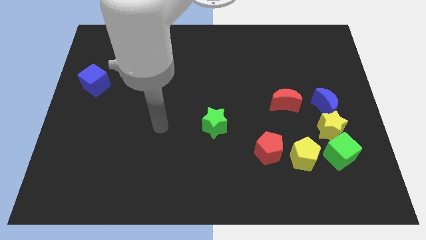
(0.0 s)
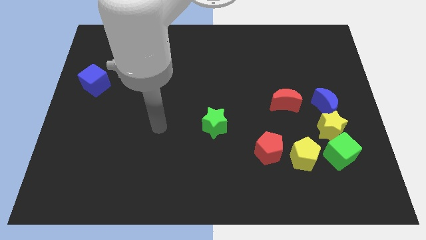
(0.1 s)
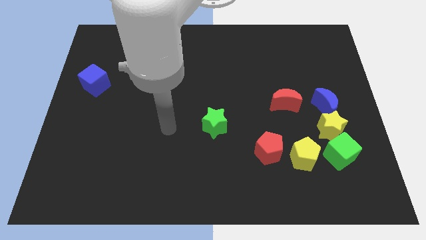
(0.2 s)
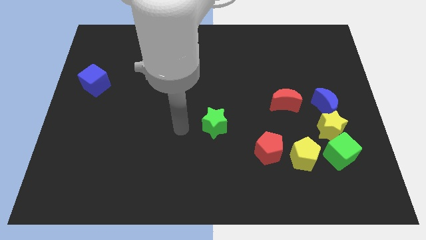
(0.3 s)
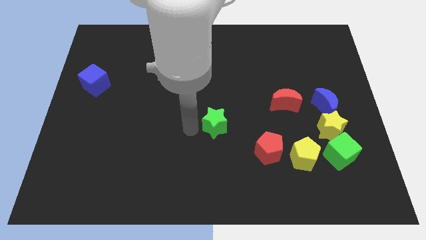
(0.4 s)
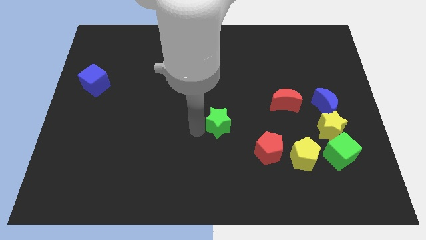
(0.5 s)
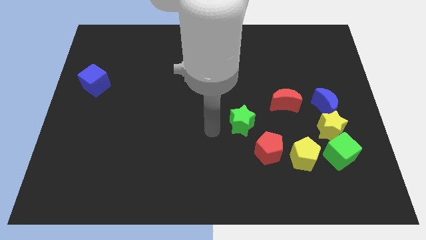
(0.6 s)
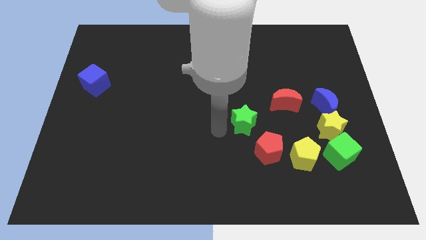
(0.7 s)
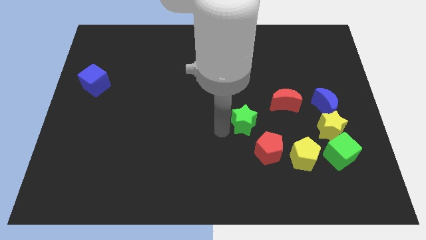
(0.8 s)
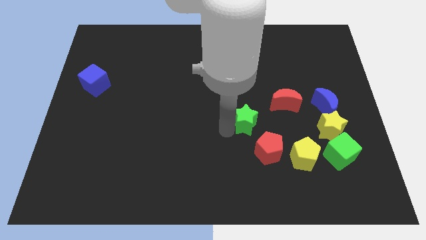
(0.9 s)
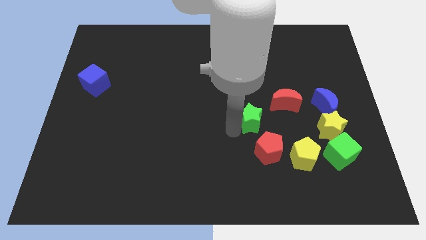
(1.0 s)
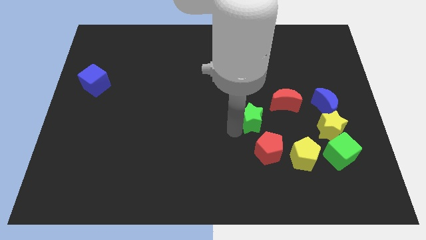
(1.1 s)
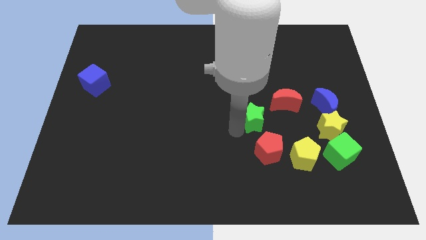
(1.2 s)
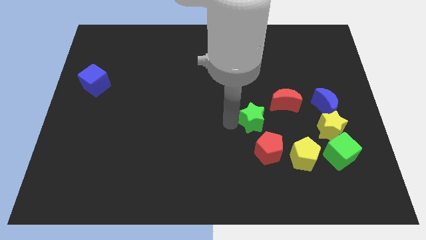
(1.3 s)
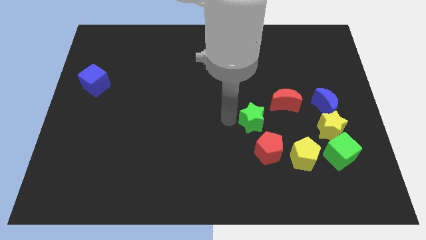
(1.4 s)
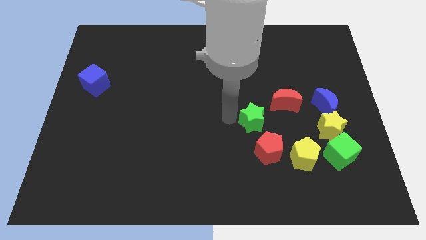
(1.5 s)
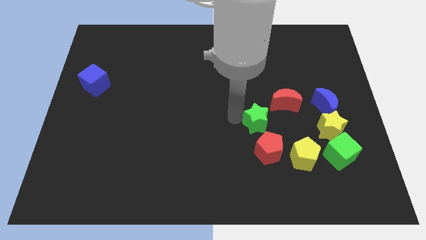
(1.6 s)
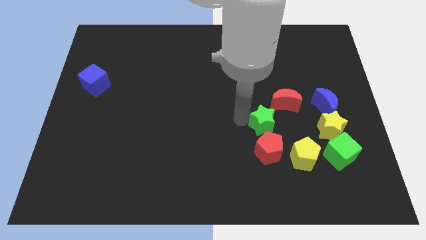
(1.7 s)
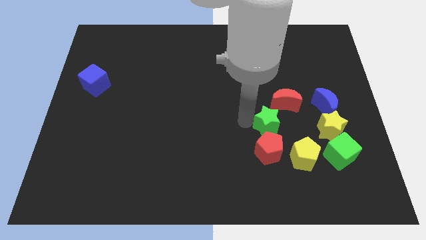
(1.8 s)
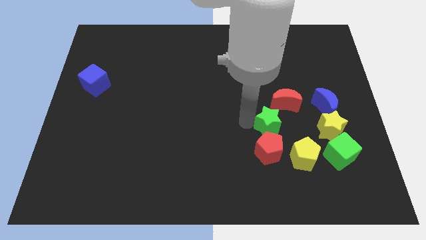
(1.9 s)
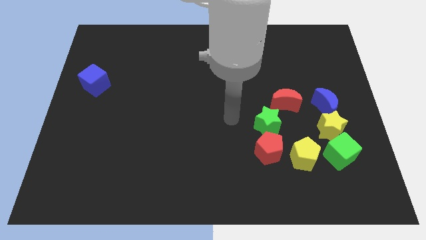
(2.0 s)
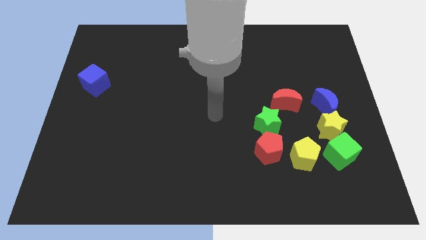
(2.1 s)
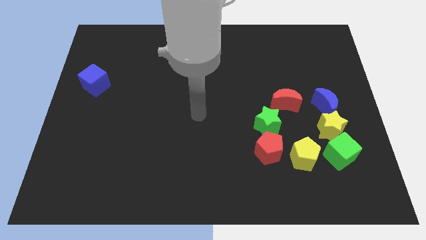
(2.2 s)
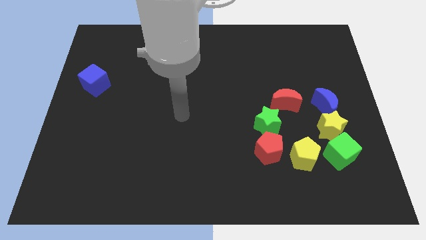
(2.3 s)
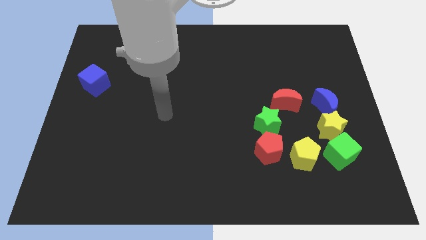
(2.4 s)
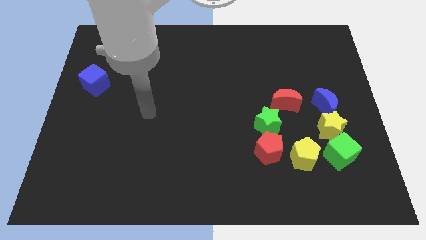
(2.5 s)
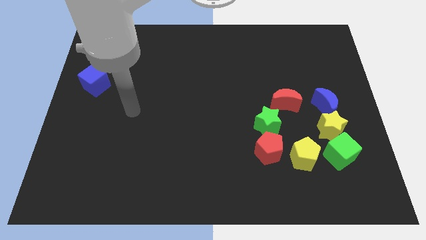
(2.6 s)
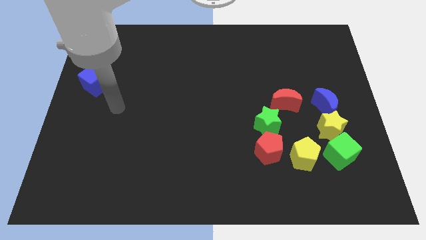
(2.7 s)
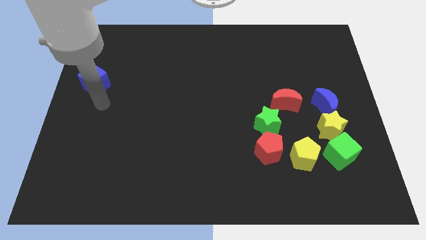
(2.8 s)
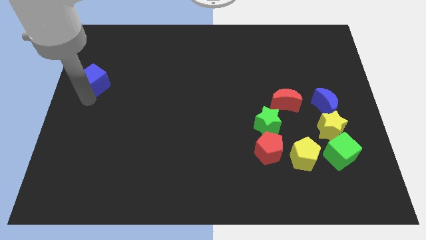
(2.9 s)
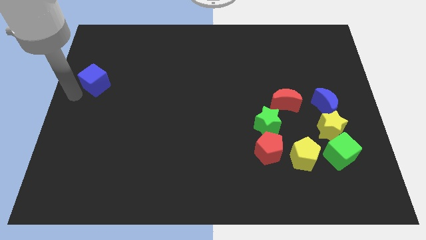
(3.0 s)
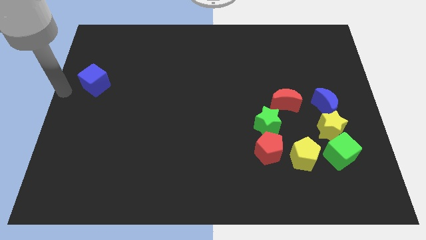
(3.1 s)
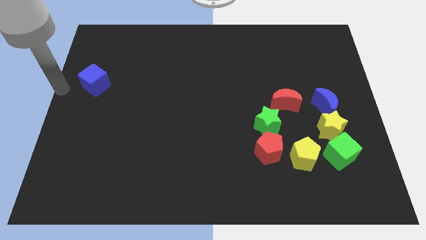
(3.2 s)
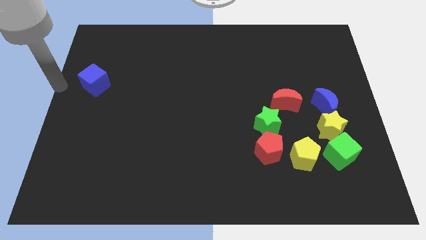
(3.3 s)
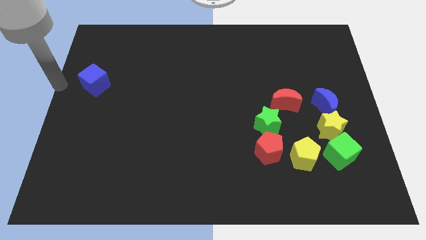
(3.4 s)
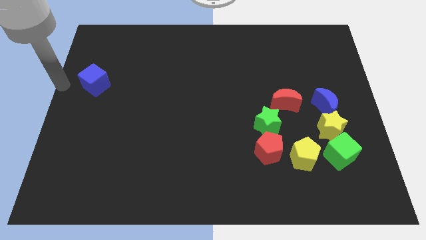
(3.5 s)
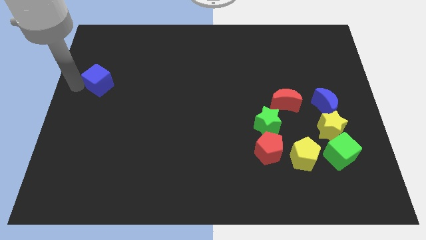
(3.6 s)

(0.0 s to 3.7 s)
move the green star above the red pentagon

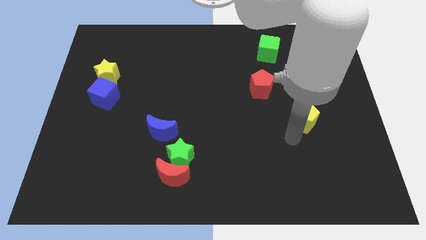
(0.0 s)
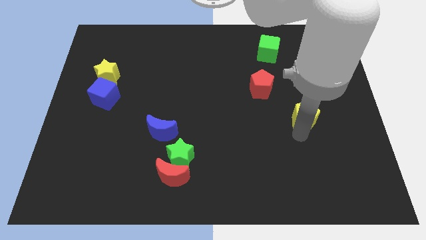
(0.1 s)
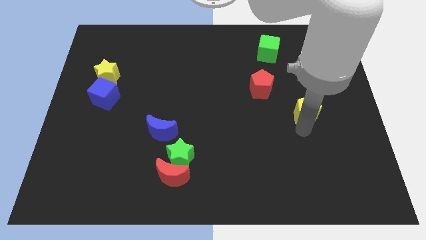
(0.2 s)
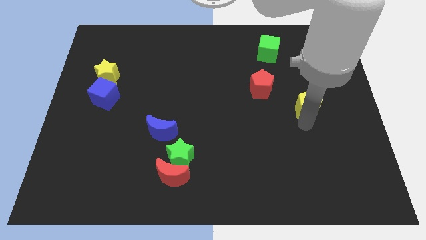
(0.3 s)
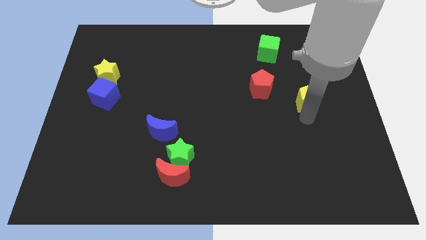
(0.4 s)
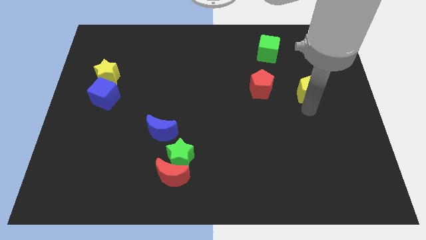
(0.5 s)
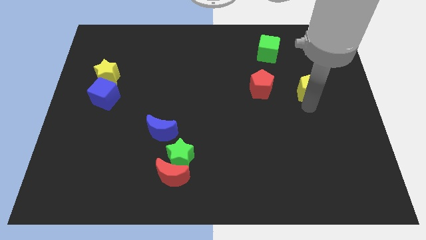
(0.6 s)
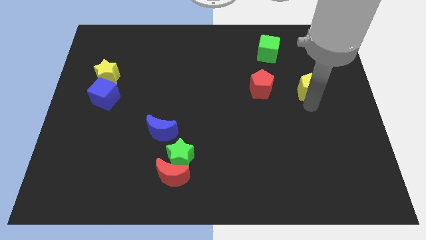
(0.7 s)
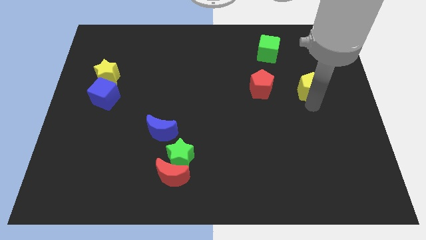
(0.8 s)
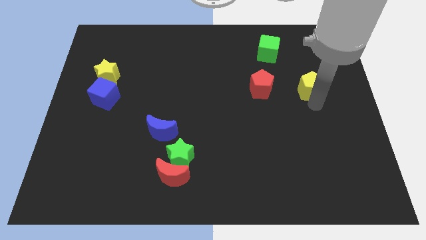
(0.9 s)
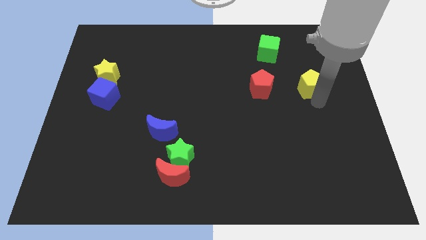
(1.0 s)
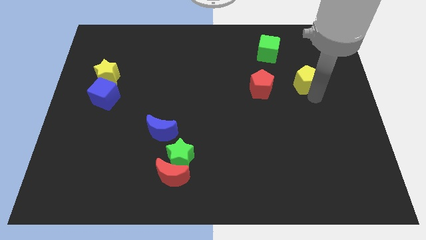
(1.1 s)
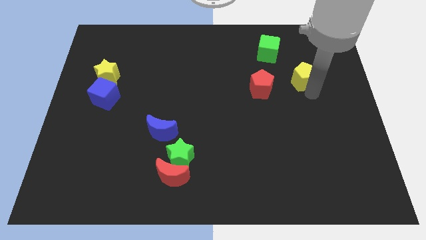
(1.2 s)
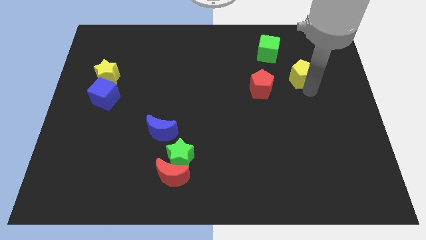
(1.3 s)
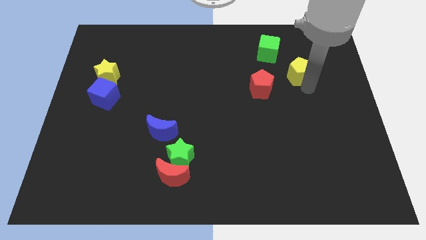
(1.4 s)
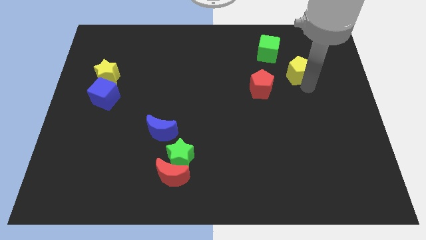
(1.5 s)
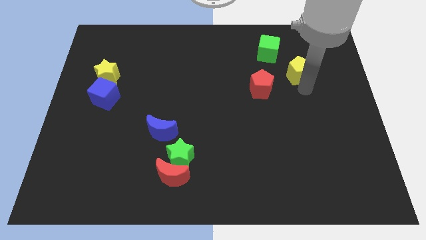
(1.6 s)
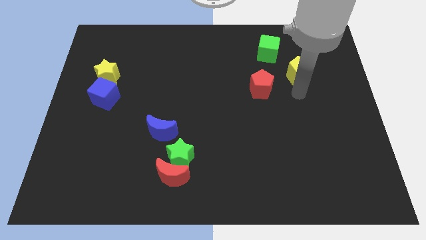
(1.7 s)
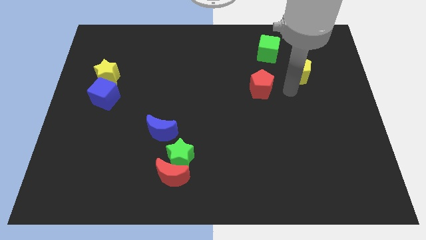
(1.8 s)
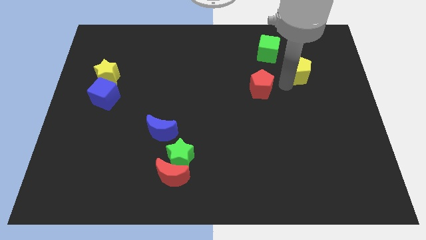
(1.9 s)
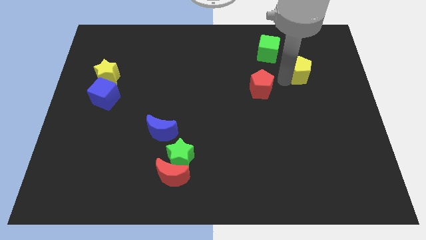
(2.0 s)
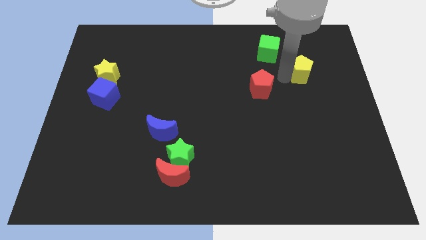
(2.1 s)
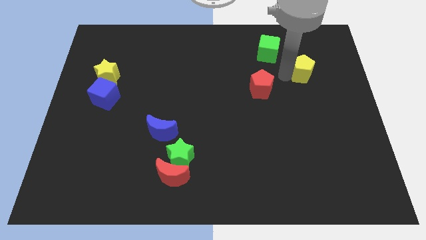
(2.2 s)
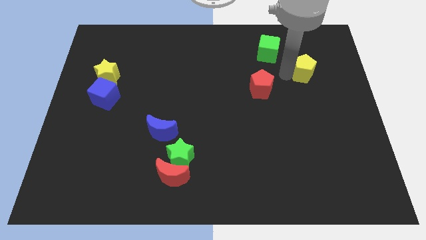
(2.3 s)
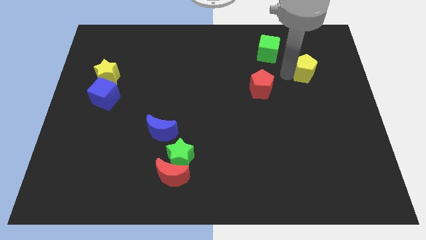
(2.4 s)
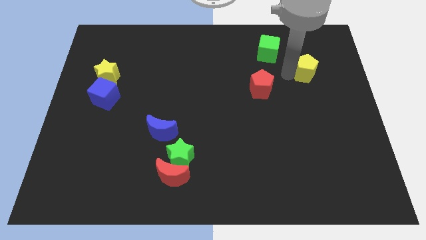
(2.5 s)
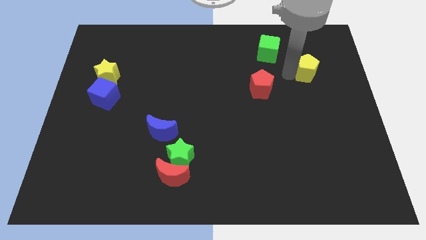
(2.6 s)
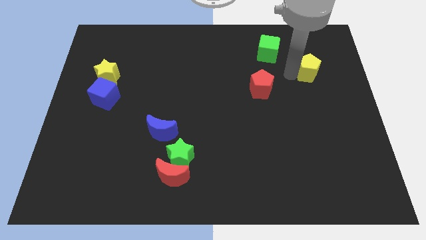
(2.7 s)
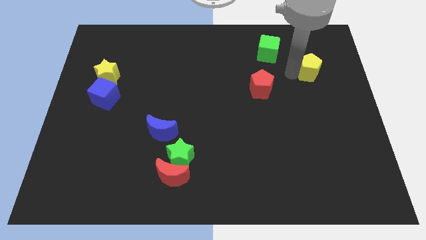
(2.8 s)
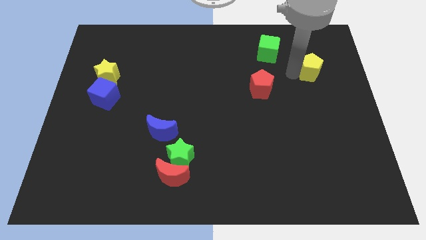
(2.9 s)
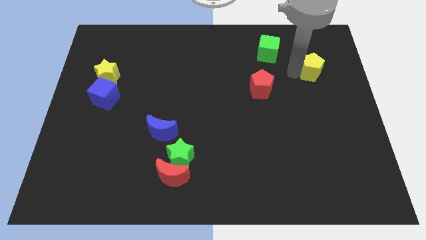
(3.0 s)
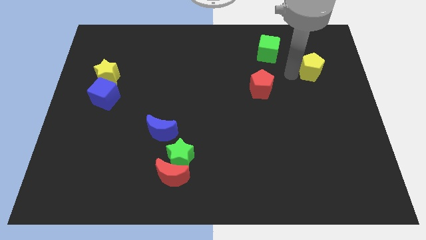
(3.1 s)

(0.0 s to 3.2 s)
push the yellow pentagon to the bottom right of the green cube

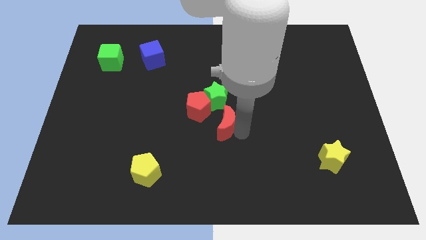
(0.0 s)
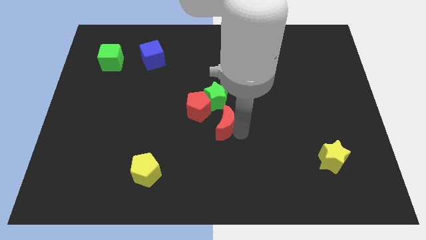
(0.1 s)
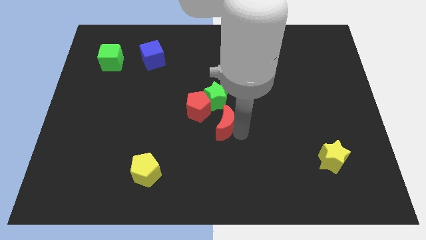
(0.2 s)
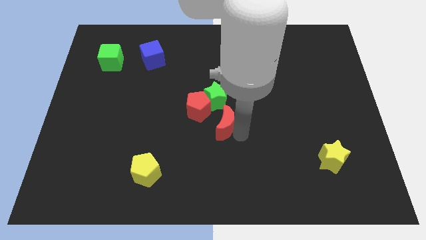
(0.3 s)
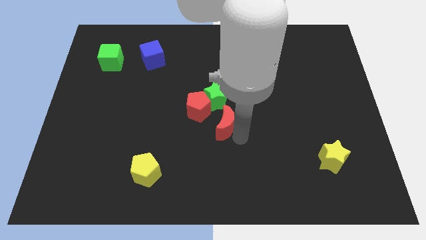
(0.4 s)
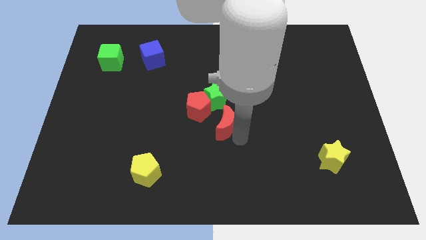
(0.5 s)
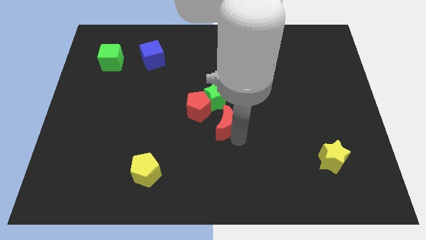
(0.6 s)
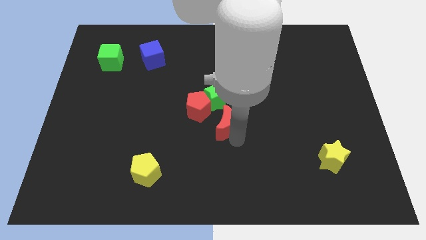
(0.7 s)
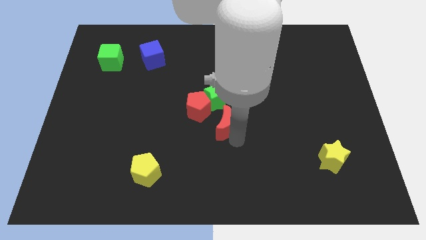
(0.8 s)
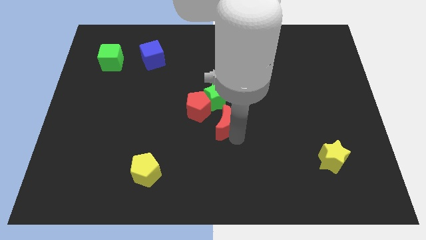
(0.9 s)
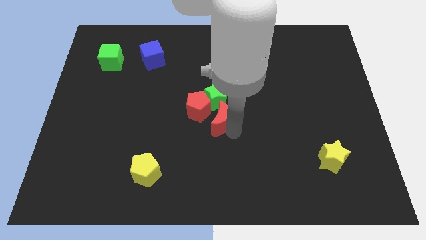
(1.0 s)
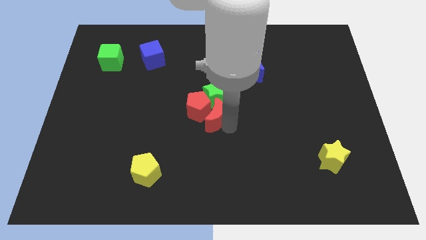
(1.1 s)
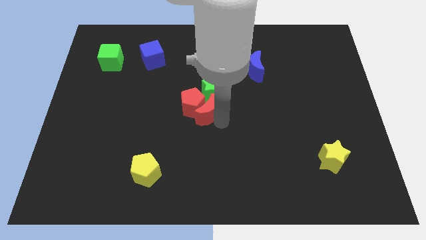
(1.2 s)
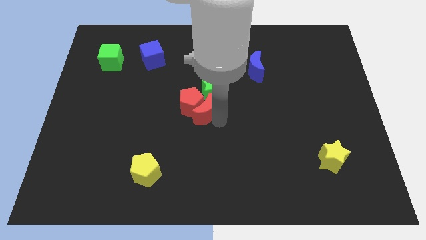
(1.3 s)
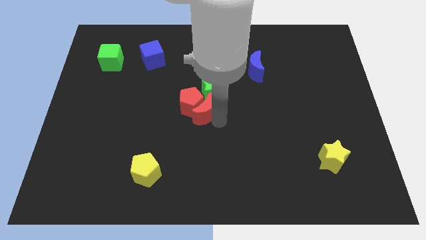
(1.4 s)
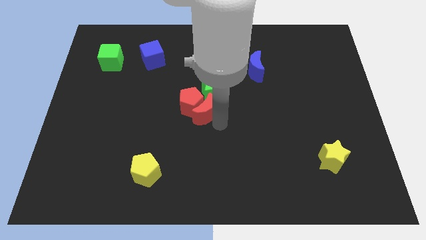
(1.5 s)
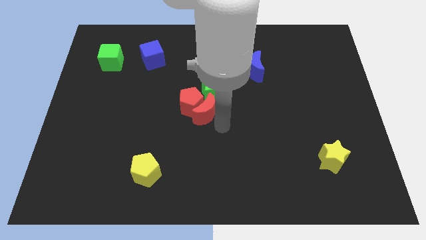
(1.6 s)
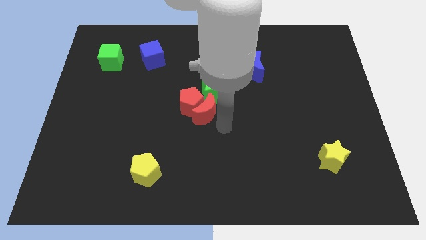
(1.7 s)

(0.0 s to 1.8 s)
push the red crescent close to the red pentagon

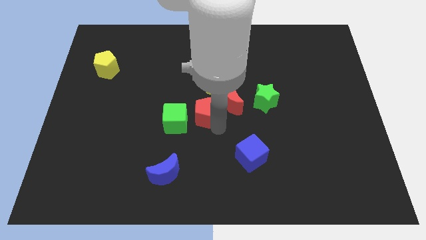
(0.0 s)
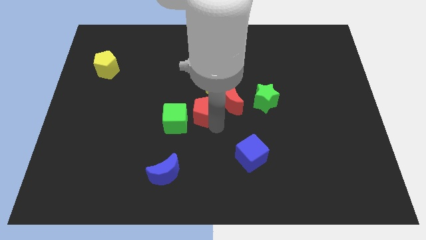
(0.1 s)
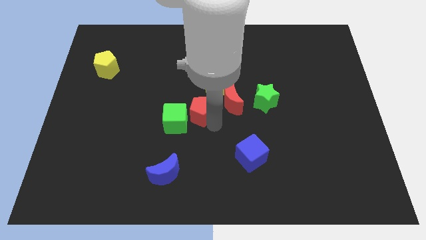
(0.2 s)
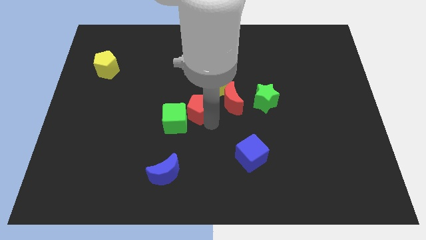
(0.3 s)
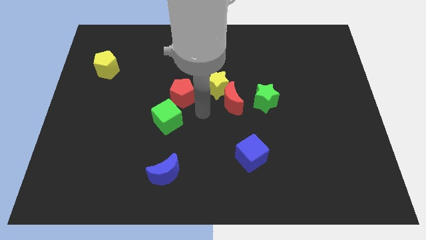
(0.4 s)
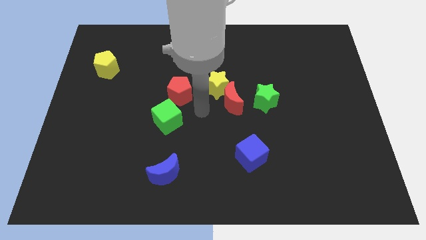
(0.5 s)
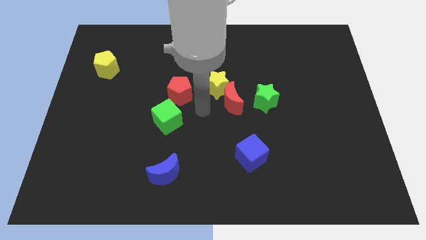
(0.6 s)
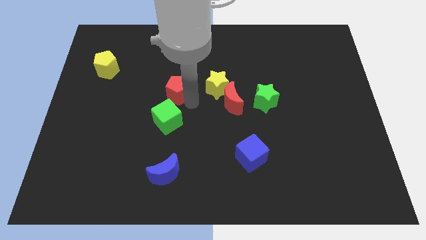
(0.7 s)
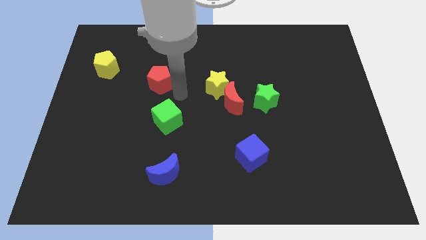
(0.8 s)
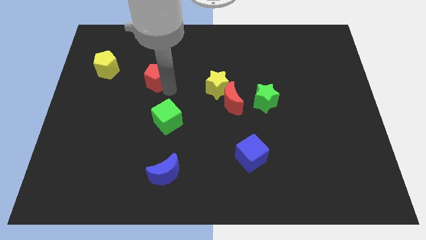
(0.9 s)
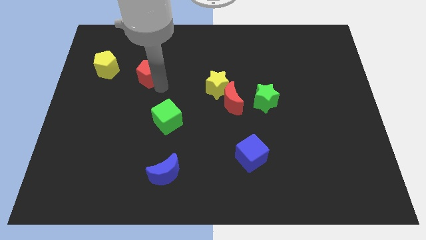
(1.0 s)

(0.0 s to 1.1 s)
separate red pentagon from green cube
